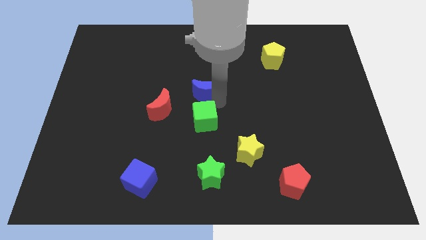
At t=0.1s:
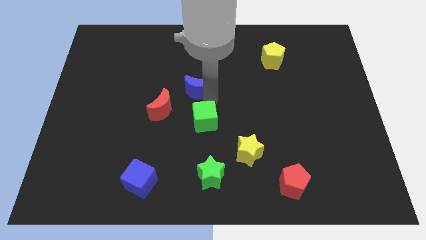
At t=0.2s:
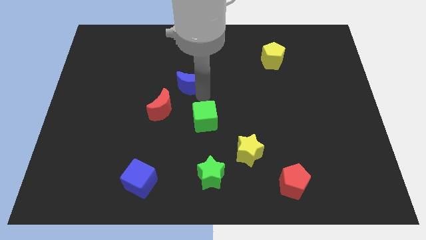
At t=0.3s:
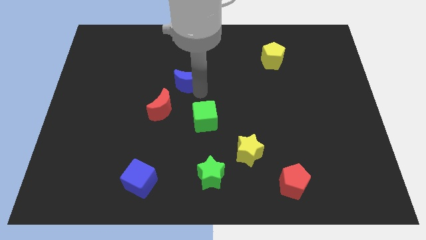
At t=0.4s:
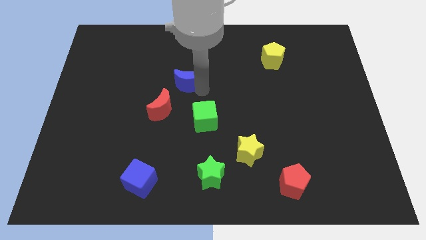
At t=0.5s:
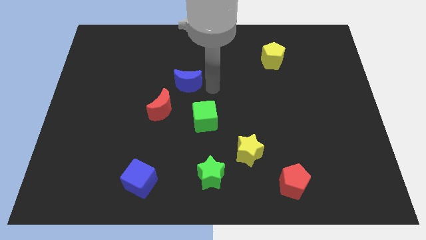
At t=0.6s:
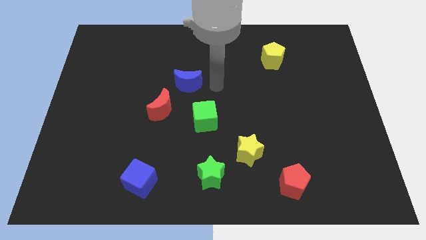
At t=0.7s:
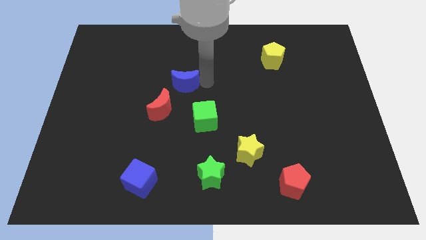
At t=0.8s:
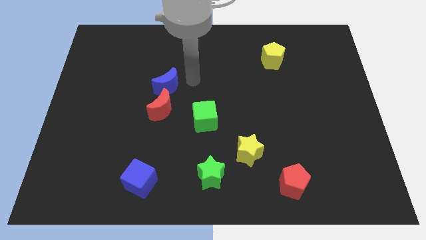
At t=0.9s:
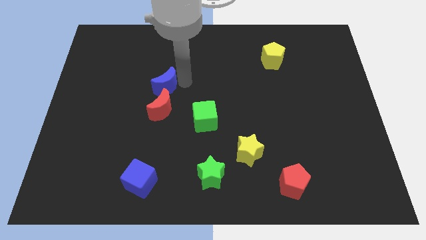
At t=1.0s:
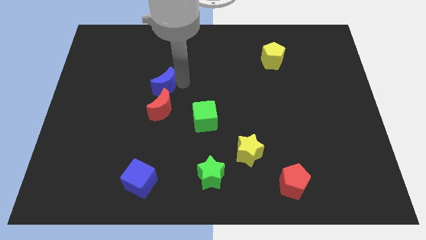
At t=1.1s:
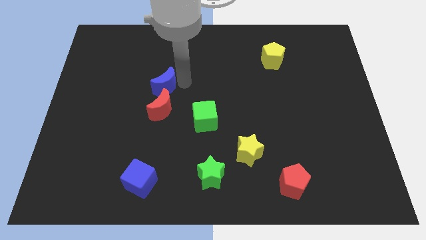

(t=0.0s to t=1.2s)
move the blue moon above the red moon

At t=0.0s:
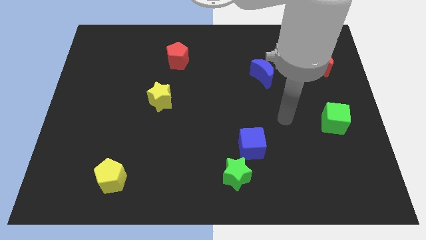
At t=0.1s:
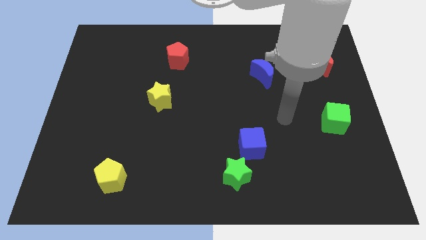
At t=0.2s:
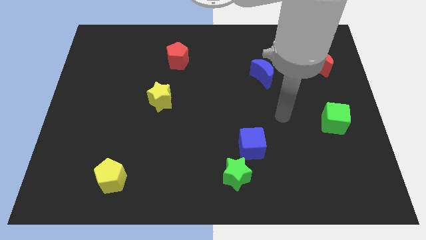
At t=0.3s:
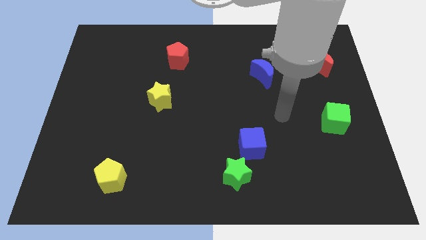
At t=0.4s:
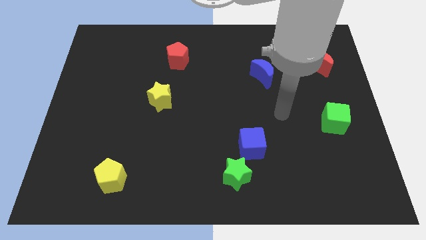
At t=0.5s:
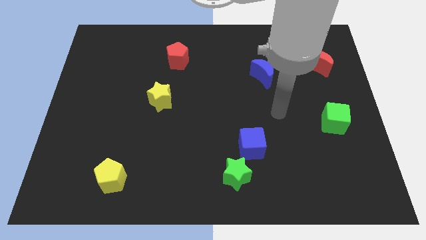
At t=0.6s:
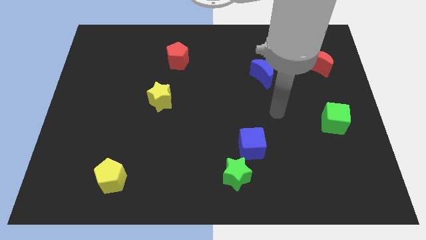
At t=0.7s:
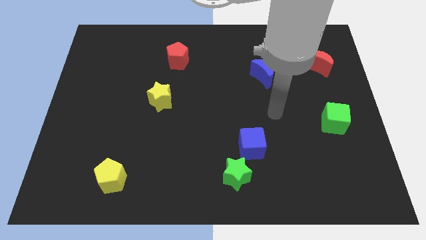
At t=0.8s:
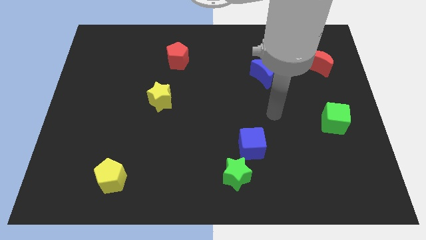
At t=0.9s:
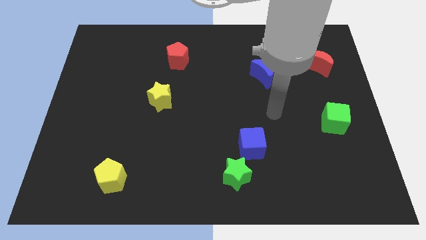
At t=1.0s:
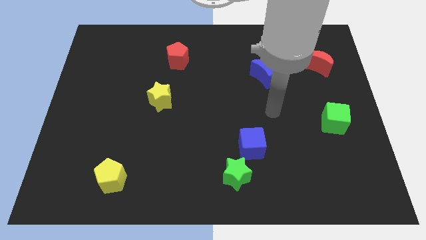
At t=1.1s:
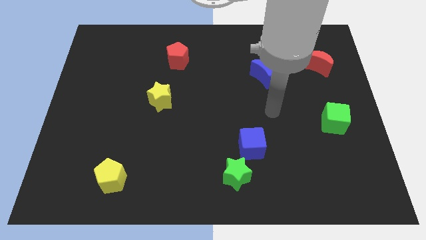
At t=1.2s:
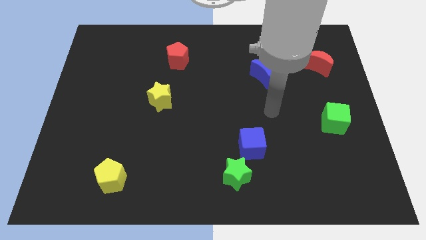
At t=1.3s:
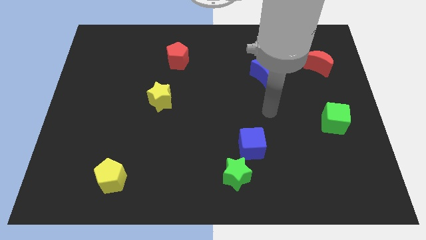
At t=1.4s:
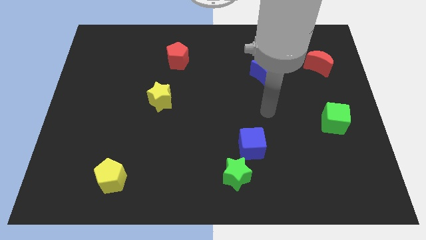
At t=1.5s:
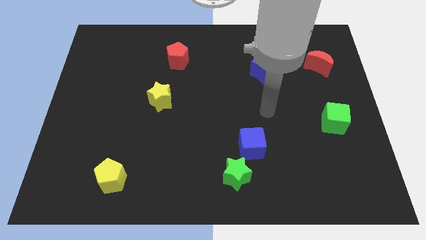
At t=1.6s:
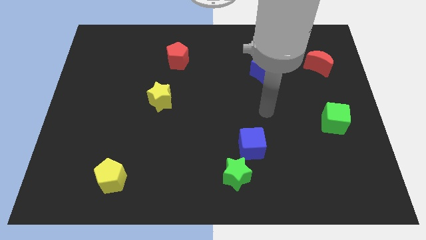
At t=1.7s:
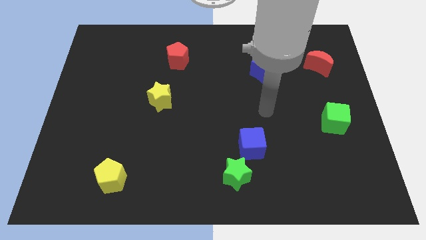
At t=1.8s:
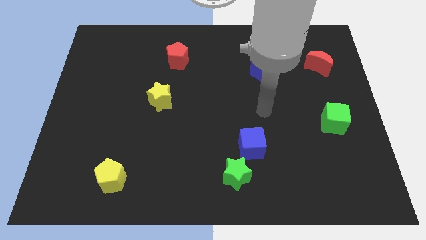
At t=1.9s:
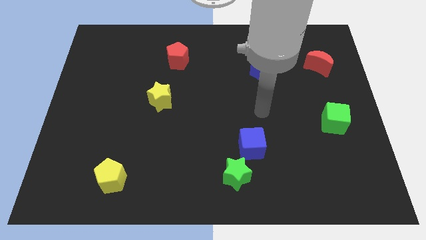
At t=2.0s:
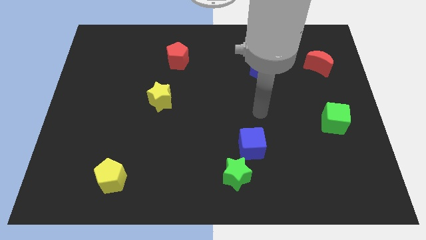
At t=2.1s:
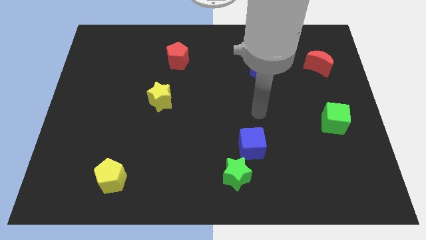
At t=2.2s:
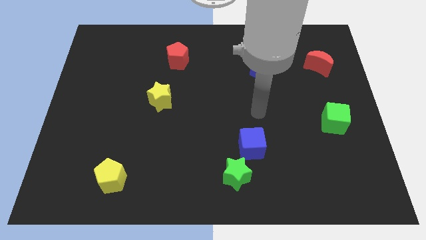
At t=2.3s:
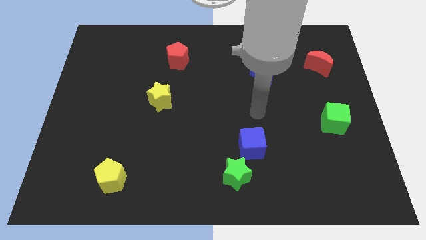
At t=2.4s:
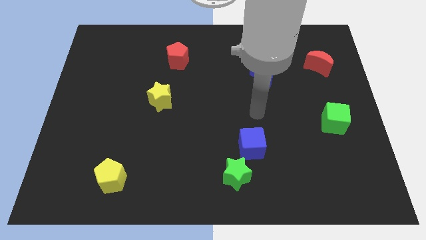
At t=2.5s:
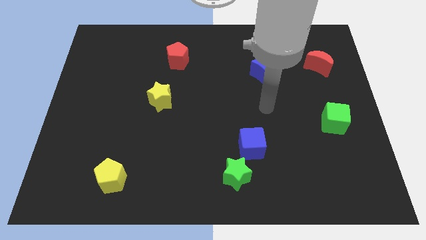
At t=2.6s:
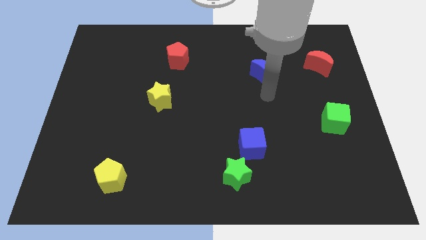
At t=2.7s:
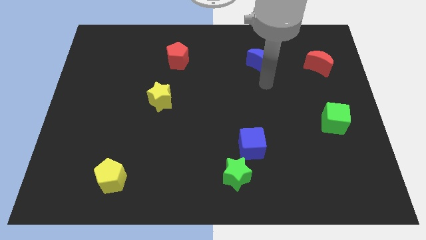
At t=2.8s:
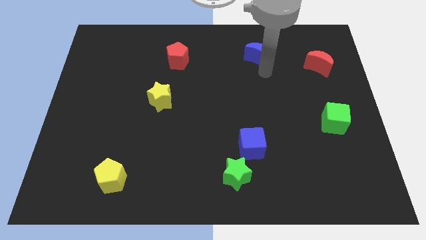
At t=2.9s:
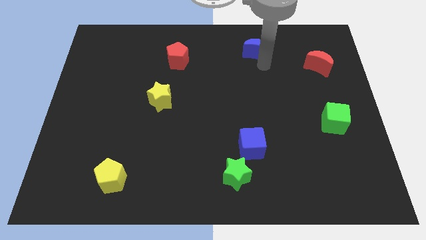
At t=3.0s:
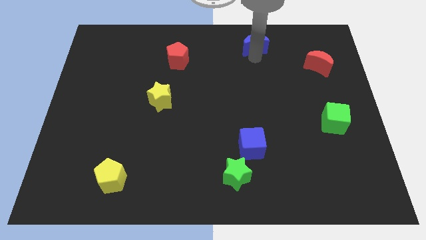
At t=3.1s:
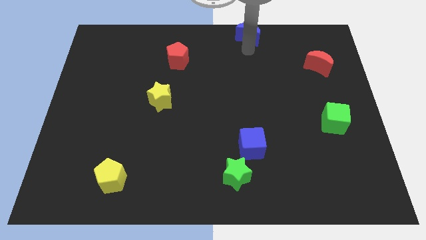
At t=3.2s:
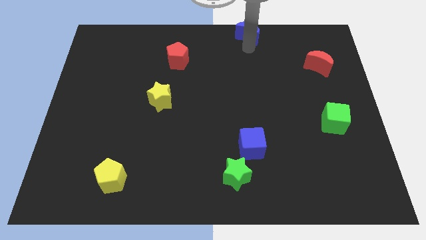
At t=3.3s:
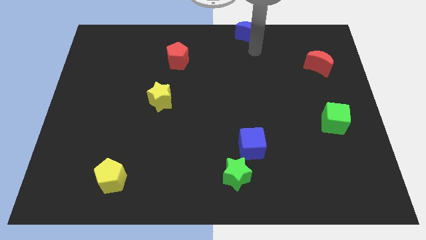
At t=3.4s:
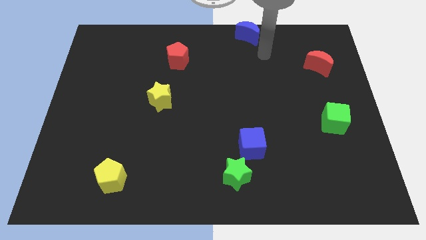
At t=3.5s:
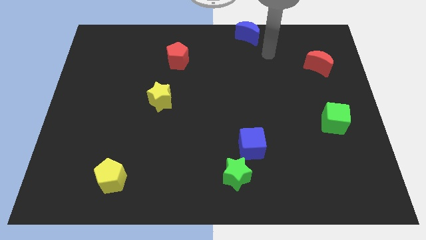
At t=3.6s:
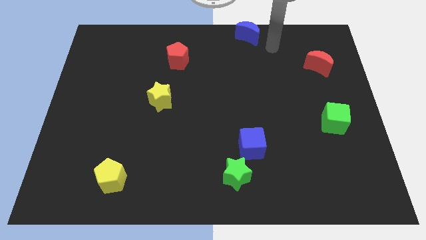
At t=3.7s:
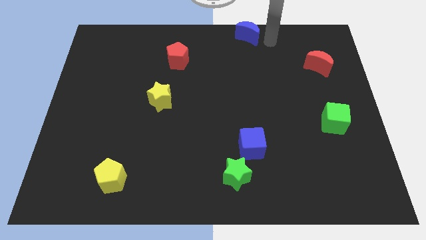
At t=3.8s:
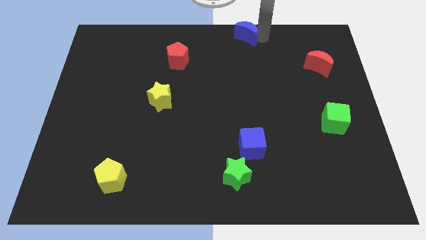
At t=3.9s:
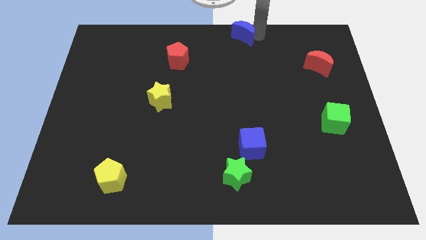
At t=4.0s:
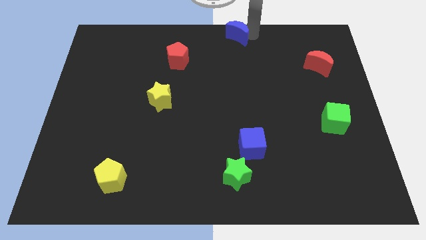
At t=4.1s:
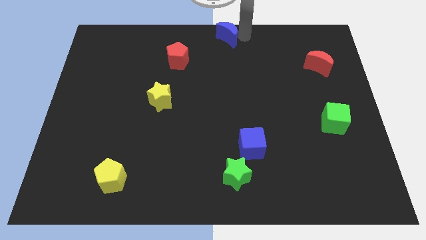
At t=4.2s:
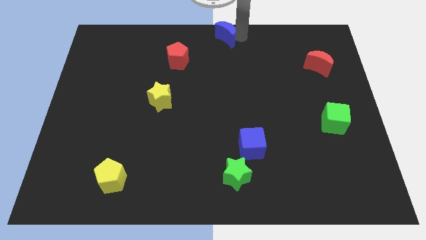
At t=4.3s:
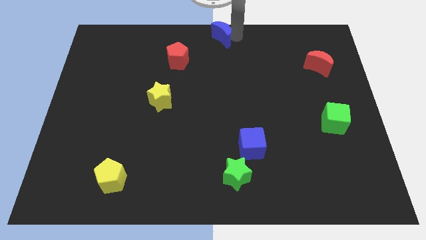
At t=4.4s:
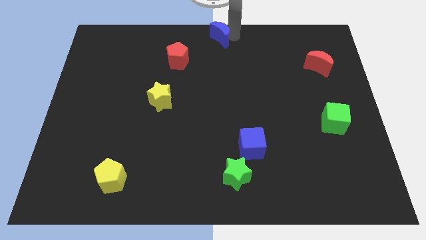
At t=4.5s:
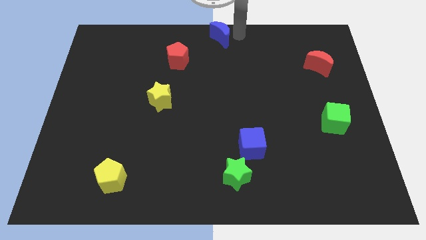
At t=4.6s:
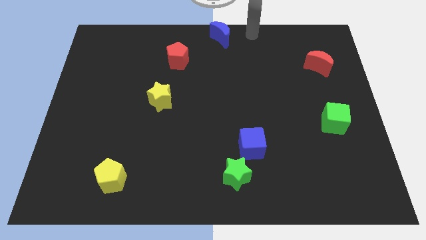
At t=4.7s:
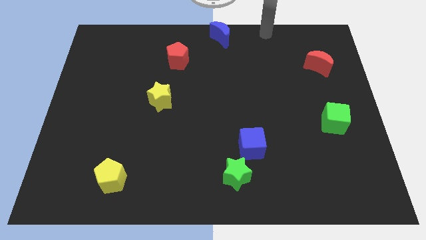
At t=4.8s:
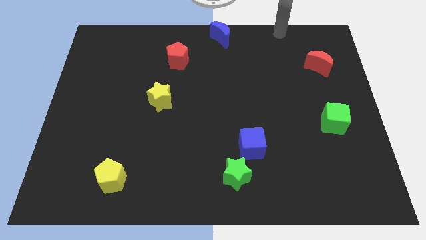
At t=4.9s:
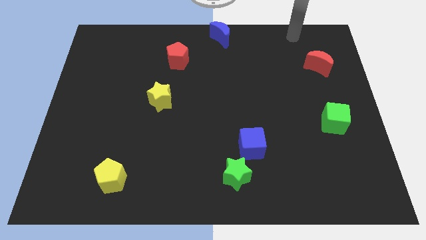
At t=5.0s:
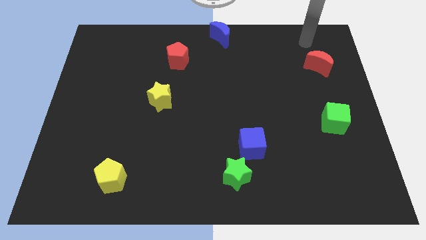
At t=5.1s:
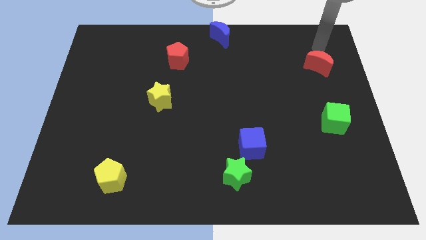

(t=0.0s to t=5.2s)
push the blue crescent to the top center of the board

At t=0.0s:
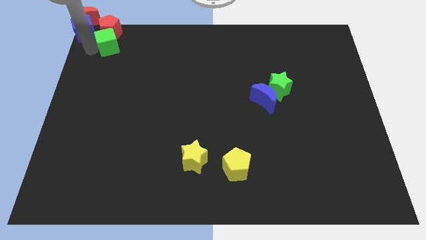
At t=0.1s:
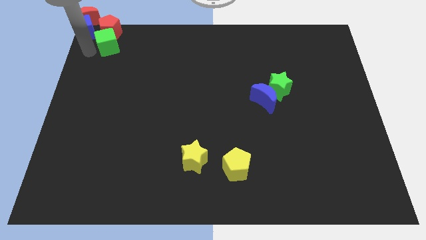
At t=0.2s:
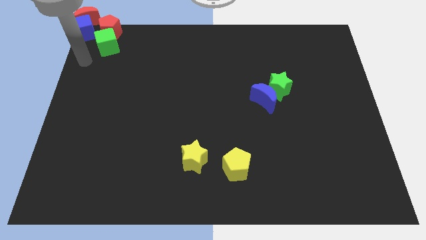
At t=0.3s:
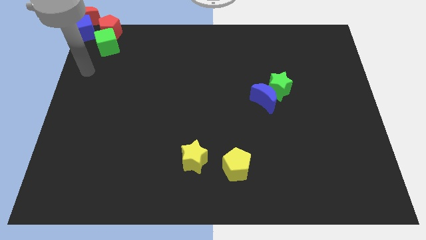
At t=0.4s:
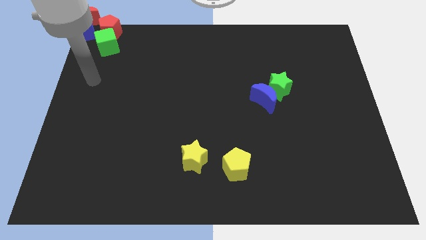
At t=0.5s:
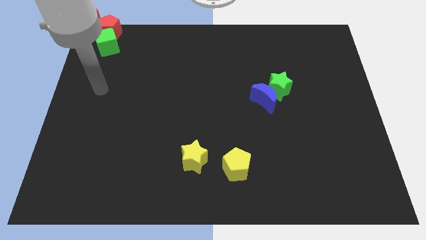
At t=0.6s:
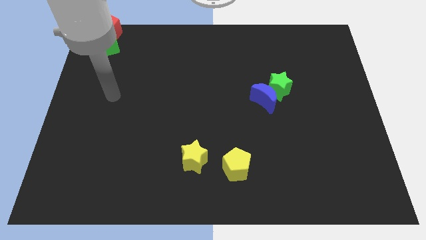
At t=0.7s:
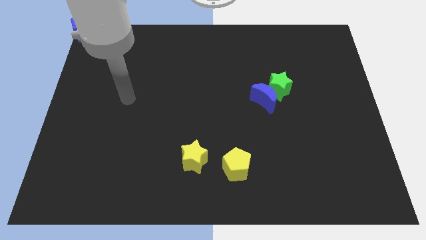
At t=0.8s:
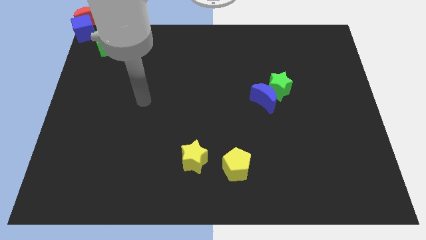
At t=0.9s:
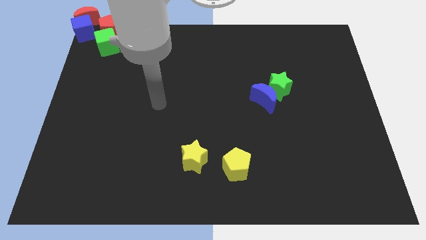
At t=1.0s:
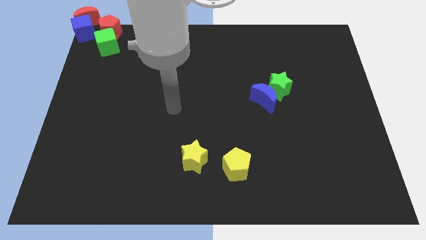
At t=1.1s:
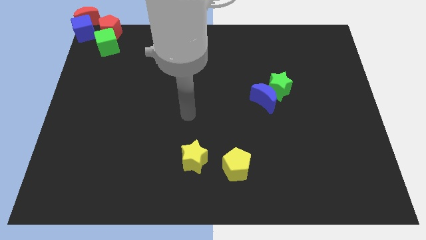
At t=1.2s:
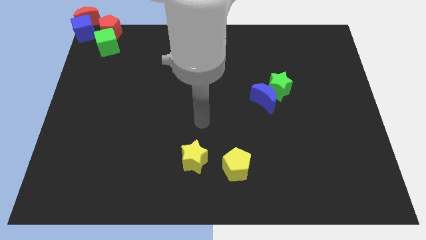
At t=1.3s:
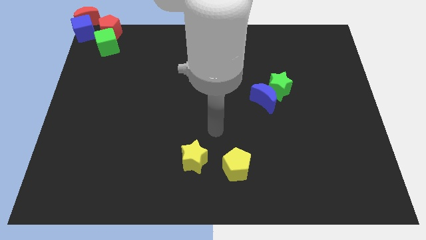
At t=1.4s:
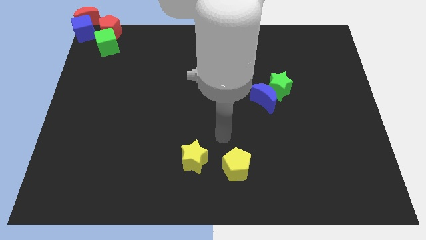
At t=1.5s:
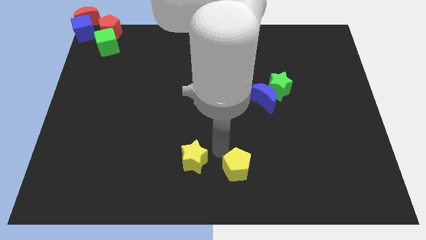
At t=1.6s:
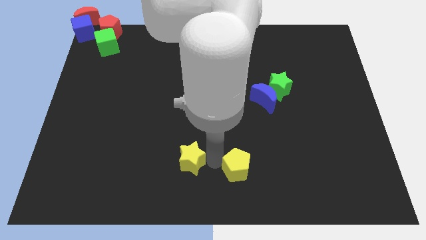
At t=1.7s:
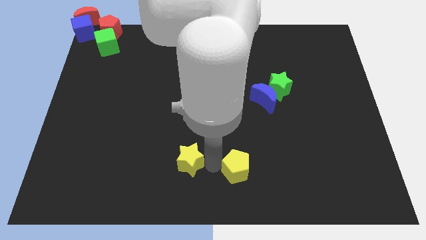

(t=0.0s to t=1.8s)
place your arm in between the yellow star and yellow pentagon

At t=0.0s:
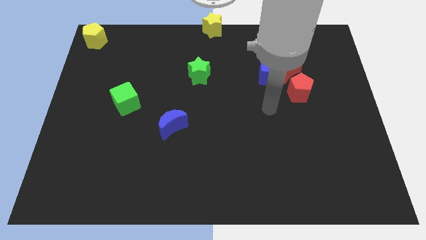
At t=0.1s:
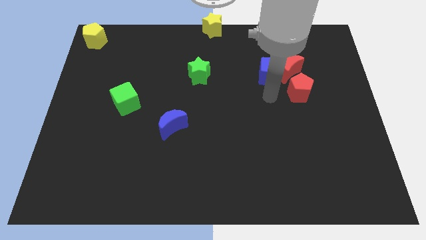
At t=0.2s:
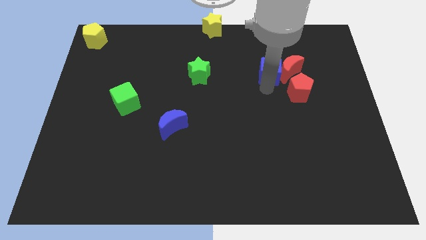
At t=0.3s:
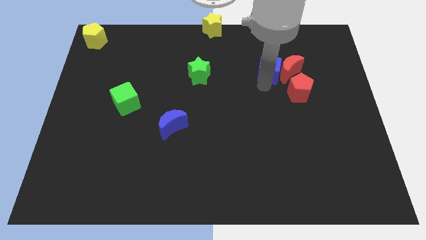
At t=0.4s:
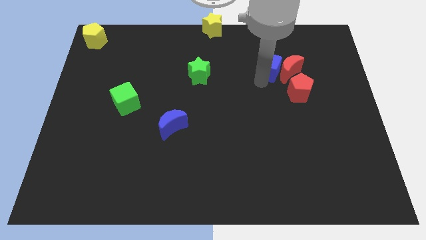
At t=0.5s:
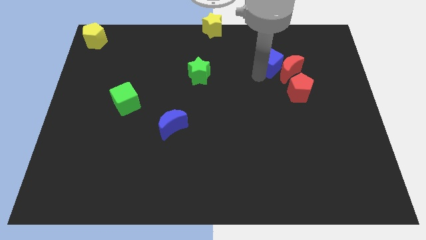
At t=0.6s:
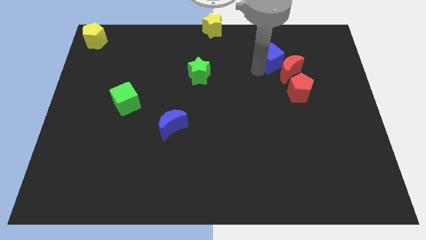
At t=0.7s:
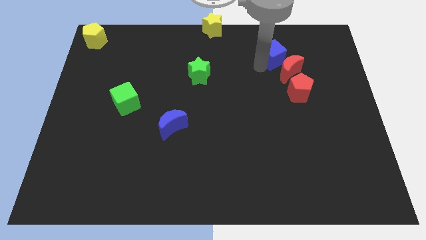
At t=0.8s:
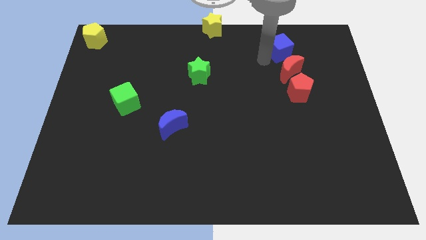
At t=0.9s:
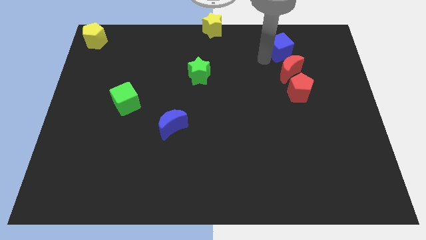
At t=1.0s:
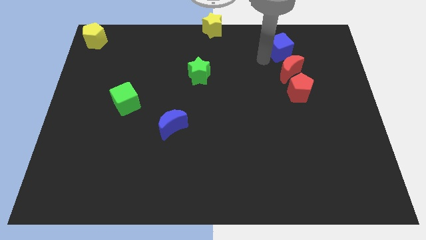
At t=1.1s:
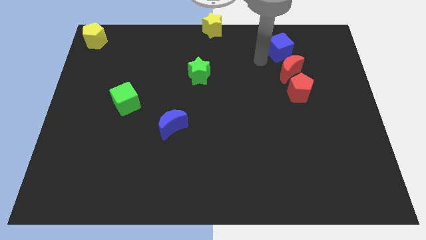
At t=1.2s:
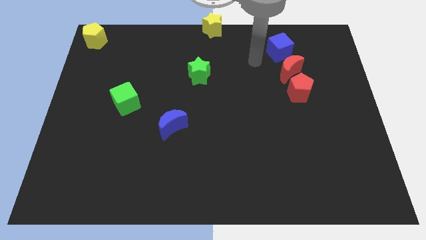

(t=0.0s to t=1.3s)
move the blue cube on top of the red crescent
